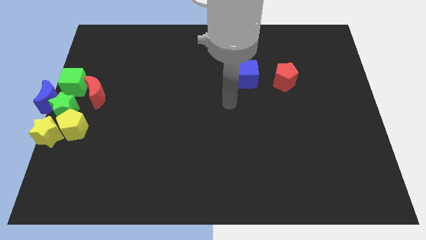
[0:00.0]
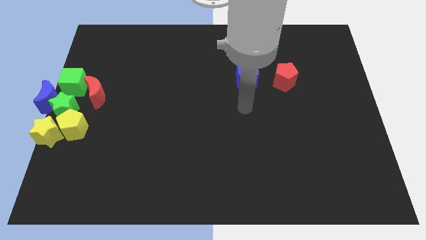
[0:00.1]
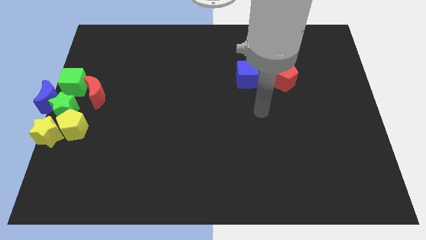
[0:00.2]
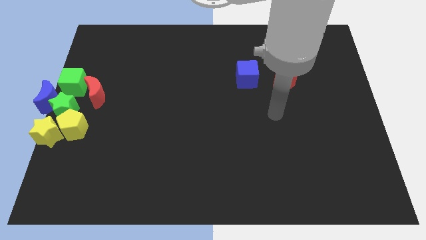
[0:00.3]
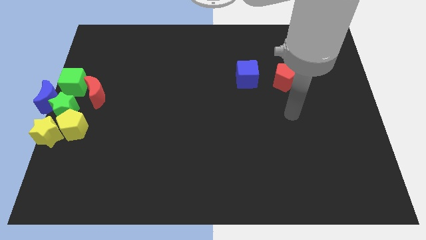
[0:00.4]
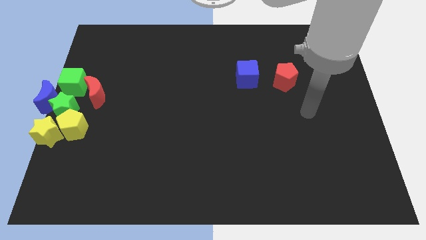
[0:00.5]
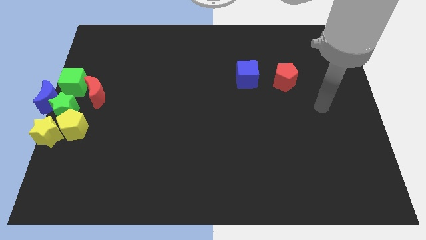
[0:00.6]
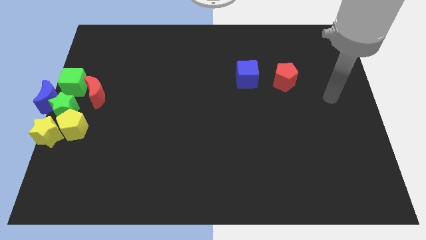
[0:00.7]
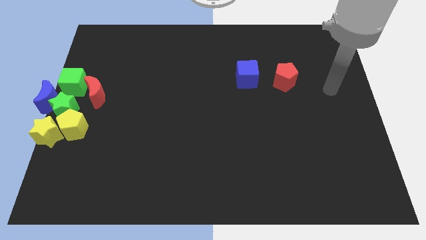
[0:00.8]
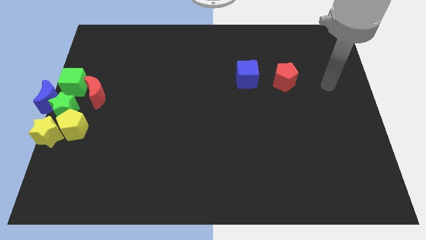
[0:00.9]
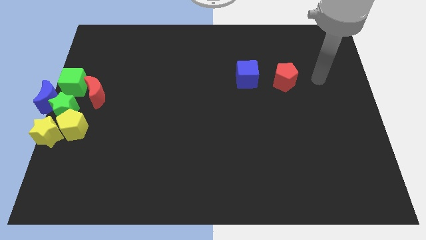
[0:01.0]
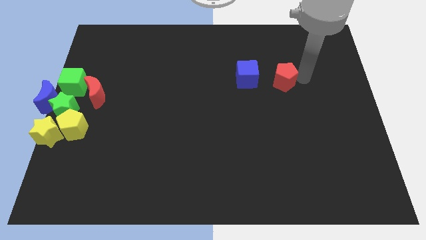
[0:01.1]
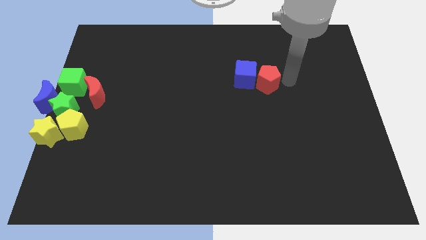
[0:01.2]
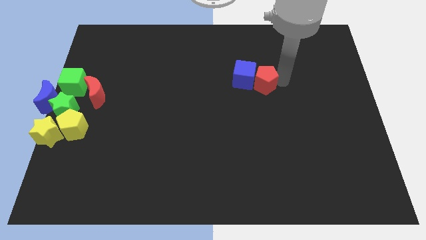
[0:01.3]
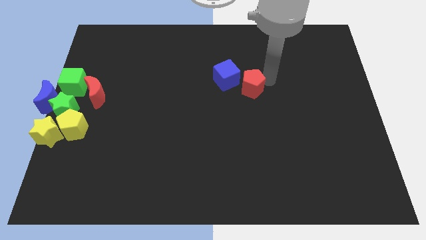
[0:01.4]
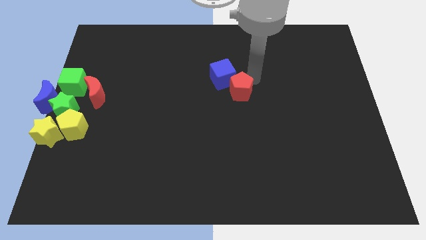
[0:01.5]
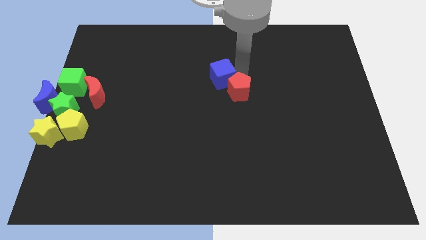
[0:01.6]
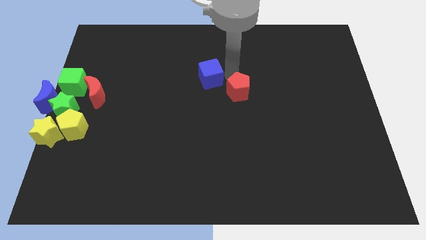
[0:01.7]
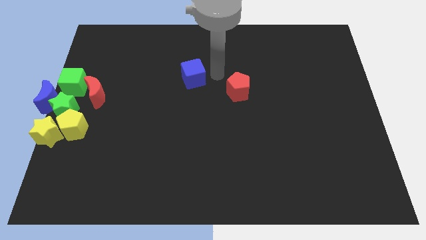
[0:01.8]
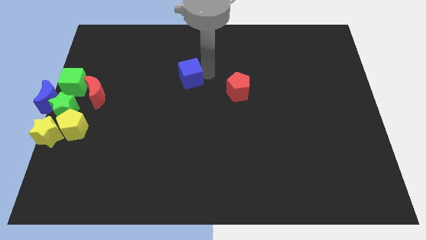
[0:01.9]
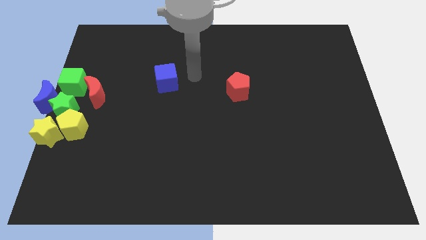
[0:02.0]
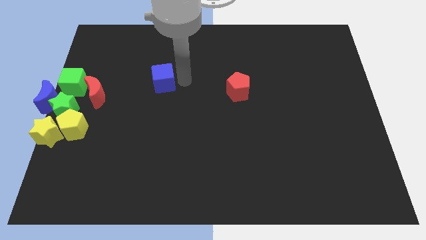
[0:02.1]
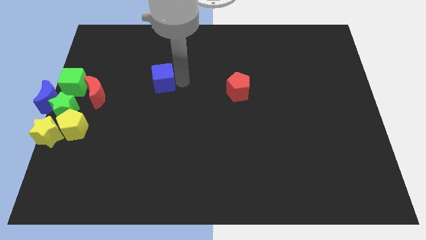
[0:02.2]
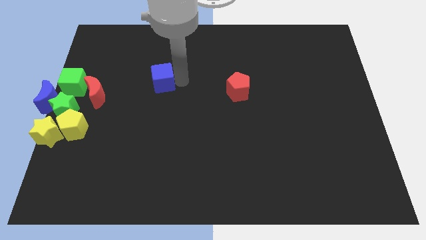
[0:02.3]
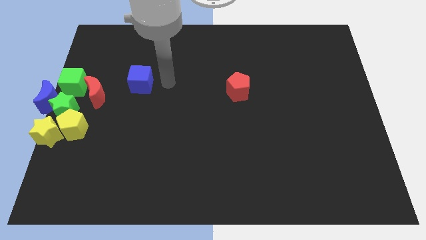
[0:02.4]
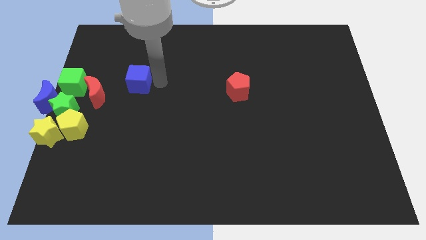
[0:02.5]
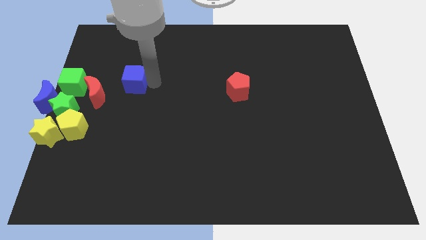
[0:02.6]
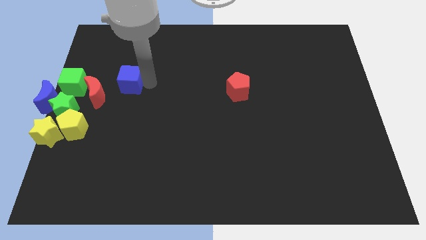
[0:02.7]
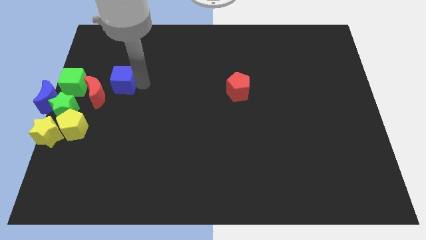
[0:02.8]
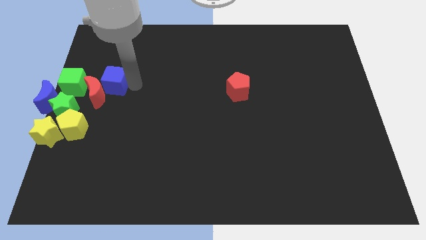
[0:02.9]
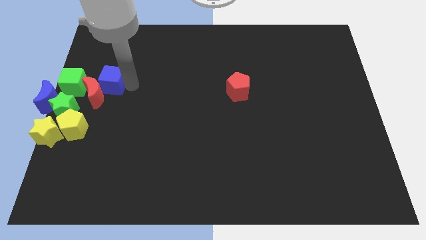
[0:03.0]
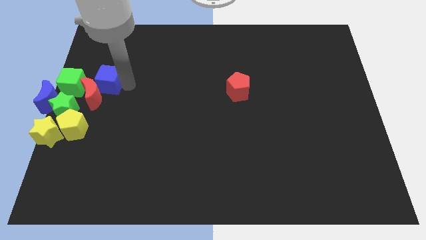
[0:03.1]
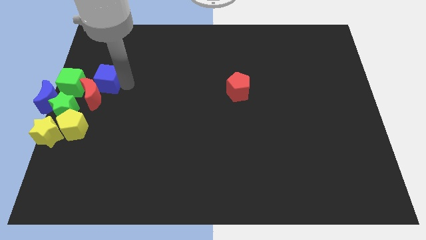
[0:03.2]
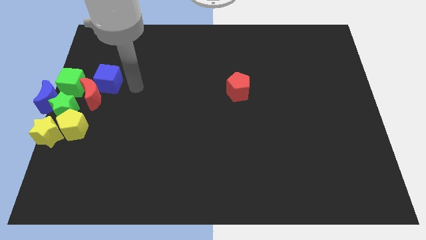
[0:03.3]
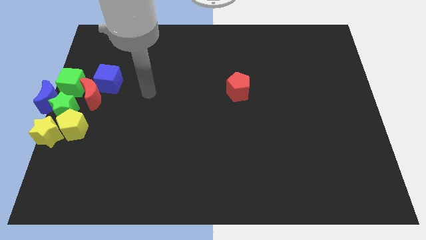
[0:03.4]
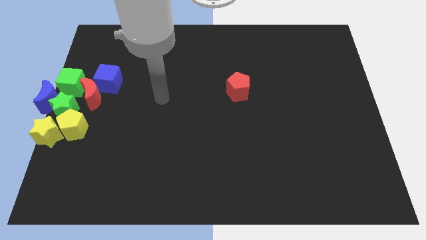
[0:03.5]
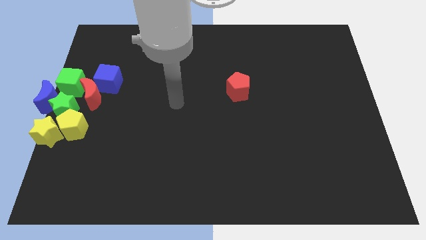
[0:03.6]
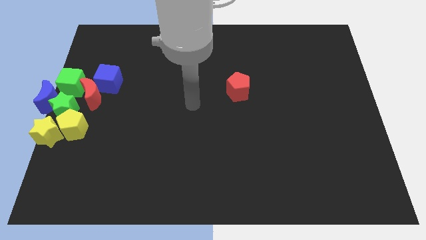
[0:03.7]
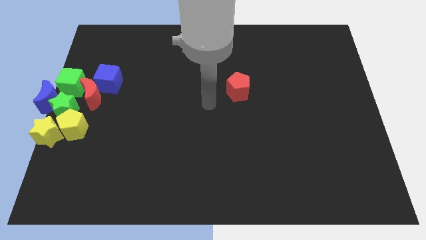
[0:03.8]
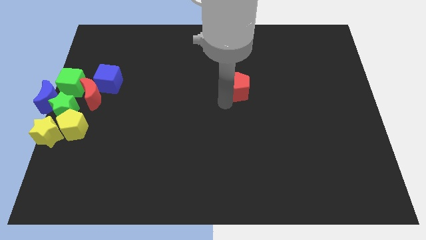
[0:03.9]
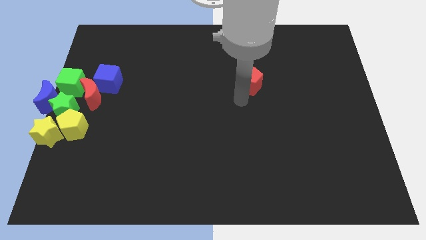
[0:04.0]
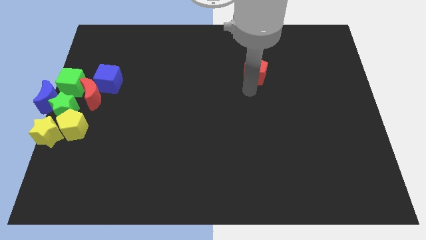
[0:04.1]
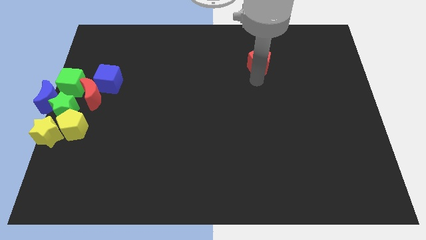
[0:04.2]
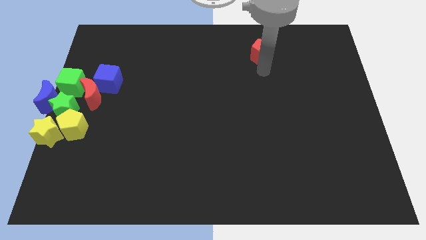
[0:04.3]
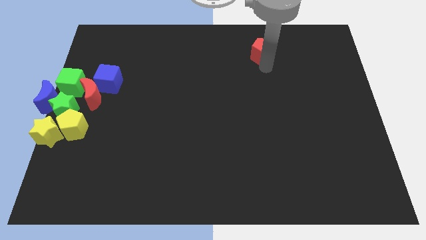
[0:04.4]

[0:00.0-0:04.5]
separate the blue cube and red pentagon

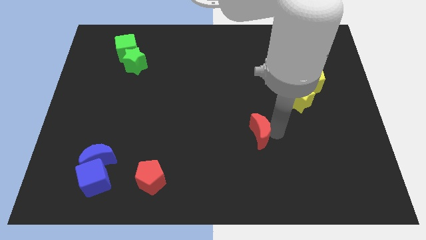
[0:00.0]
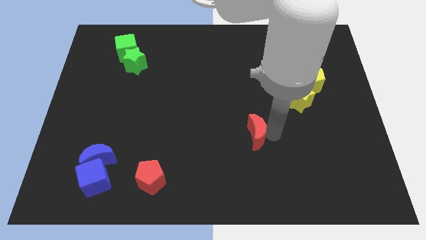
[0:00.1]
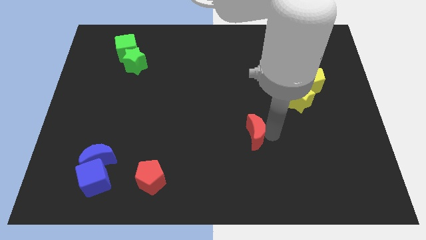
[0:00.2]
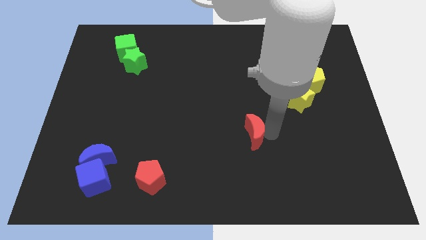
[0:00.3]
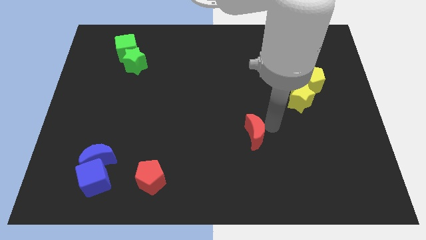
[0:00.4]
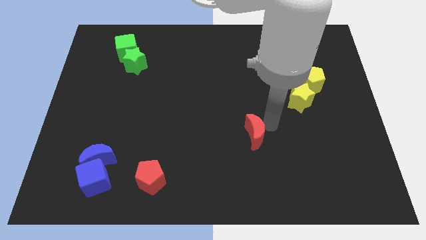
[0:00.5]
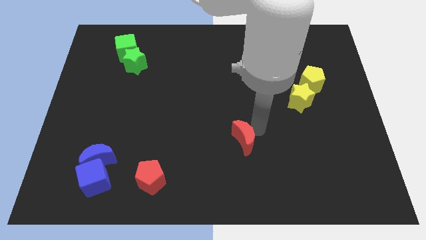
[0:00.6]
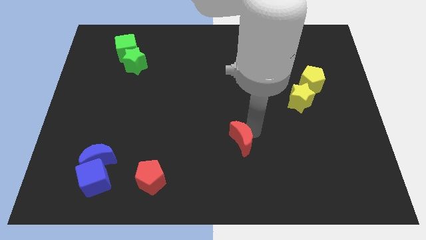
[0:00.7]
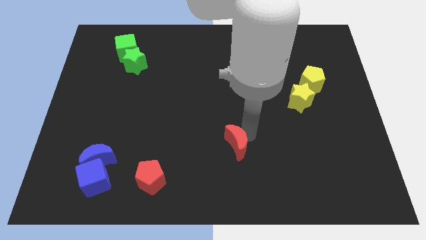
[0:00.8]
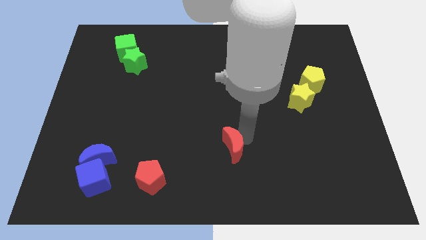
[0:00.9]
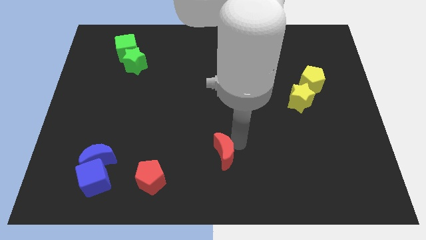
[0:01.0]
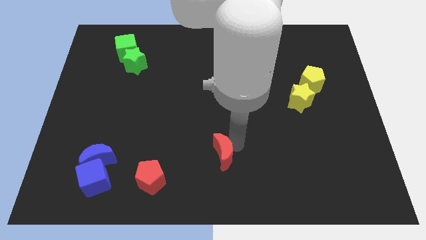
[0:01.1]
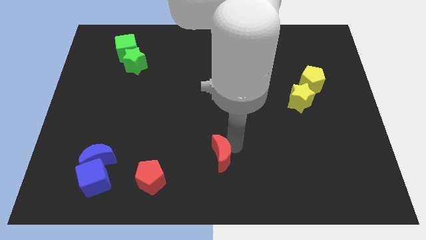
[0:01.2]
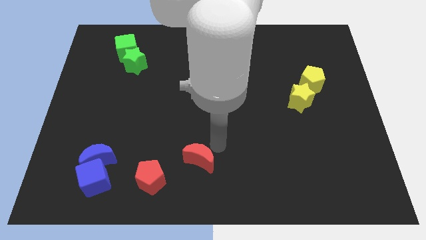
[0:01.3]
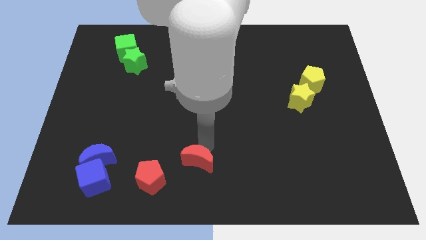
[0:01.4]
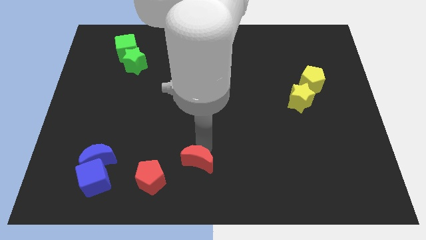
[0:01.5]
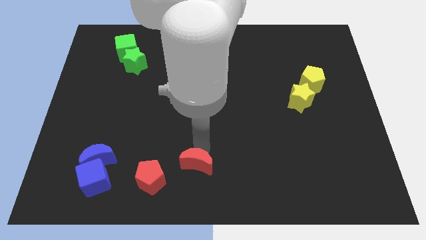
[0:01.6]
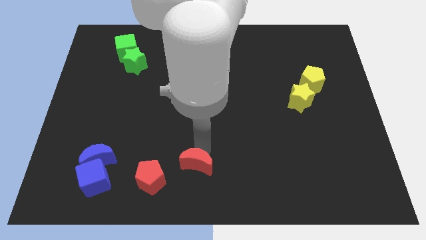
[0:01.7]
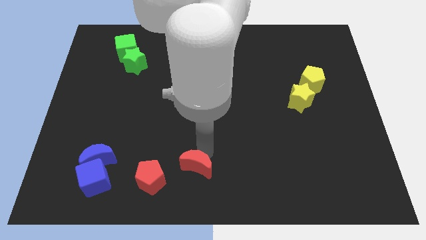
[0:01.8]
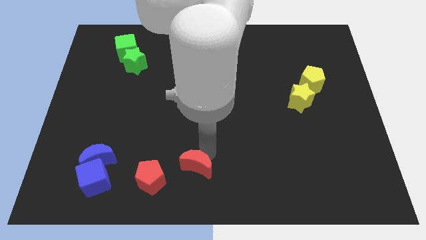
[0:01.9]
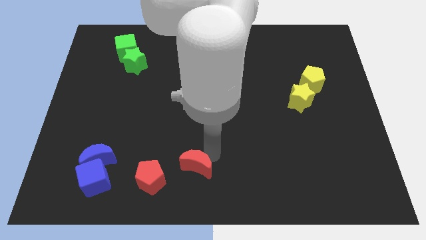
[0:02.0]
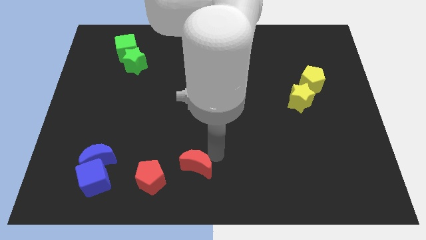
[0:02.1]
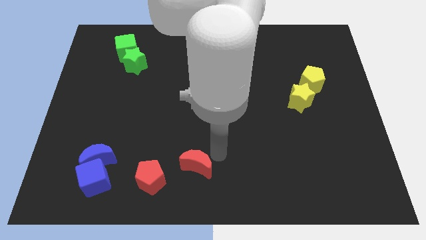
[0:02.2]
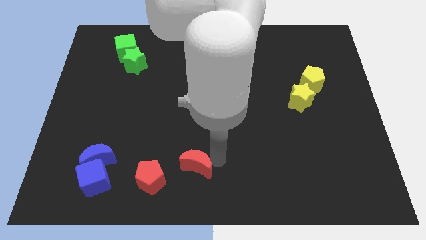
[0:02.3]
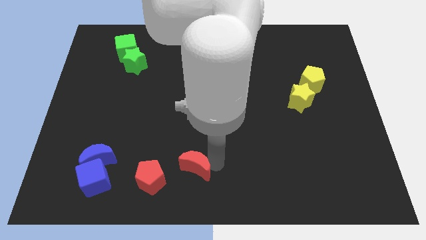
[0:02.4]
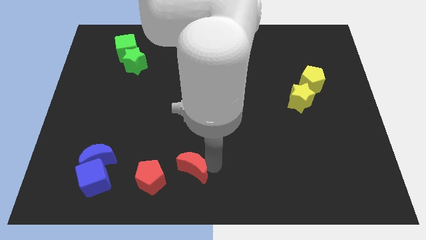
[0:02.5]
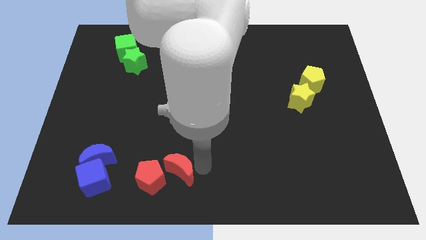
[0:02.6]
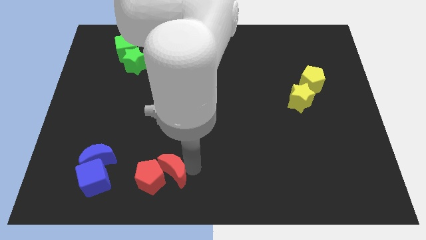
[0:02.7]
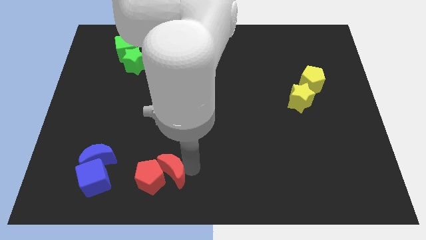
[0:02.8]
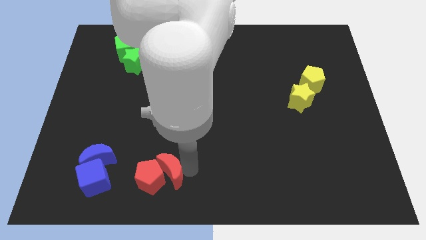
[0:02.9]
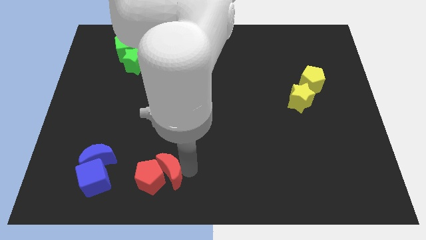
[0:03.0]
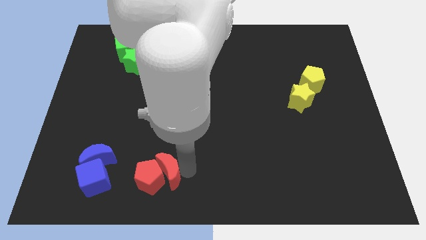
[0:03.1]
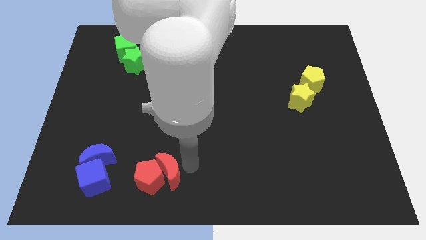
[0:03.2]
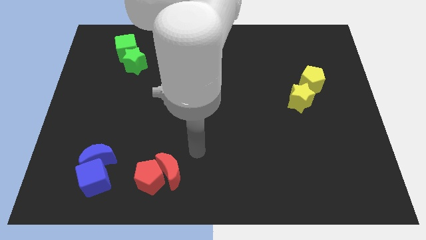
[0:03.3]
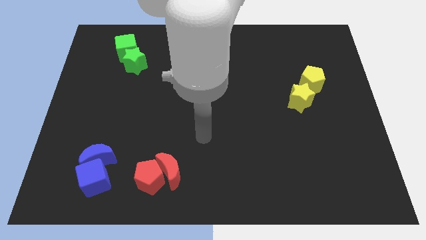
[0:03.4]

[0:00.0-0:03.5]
push the red moon into the red pentagon

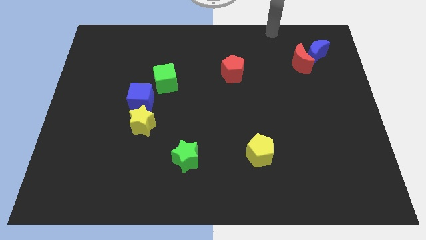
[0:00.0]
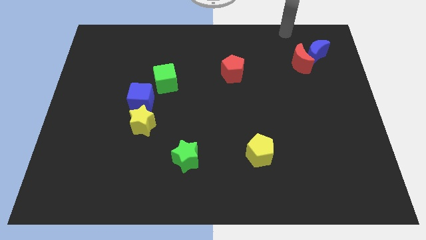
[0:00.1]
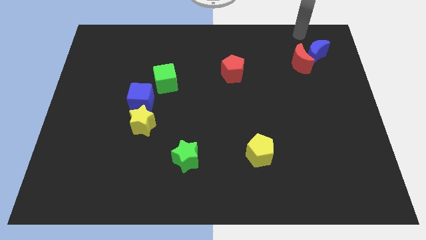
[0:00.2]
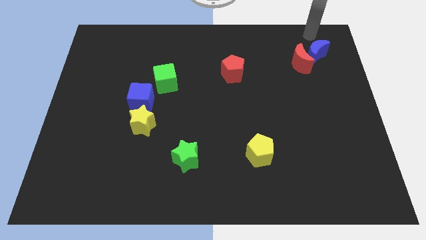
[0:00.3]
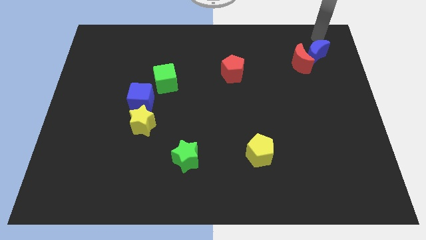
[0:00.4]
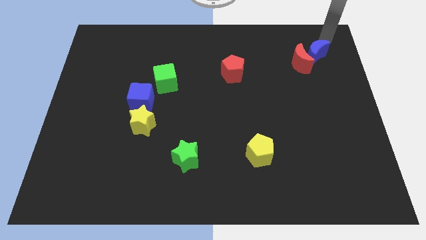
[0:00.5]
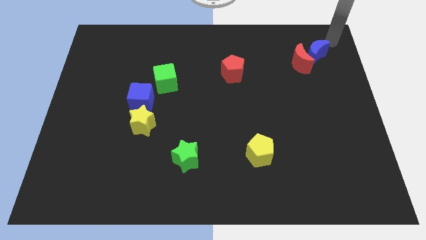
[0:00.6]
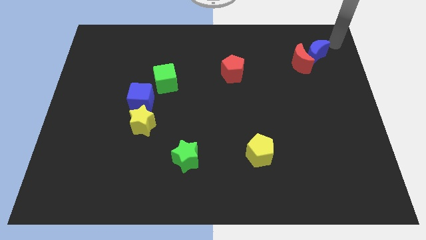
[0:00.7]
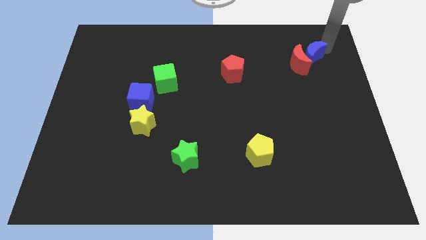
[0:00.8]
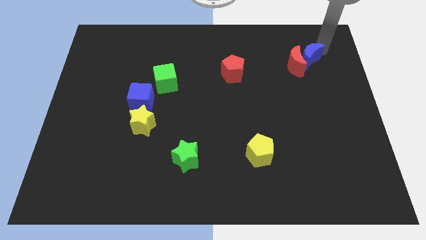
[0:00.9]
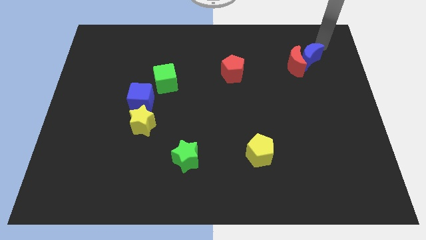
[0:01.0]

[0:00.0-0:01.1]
point your arm above blue moon
